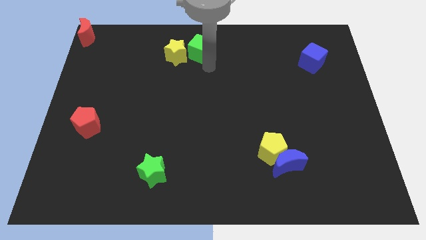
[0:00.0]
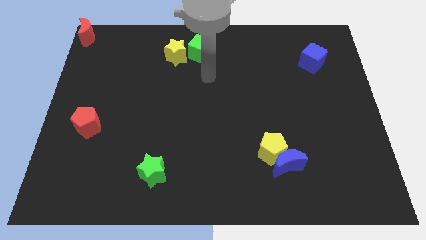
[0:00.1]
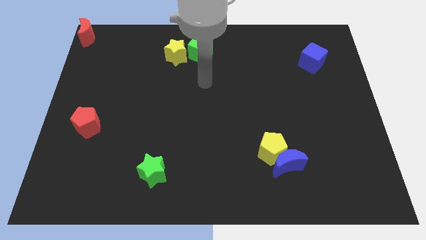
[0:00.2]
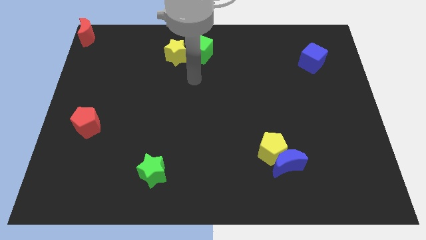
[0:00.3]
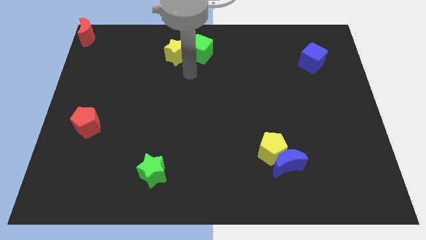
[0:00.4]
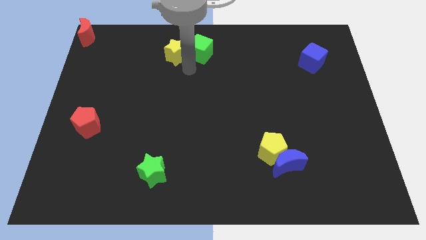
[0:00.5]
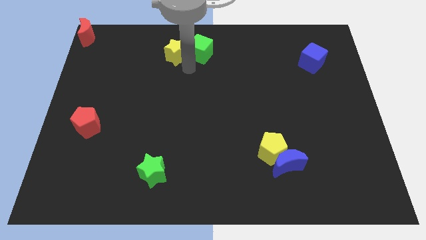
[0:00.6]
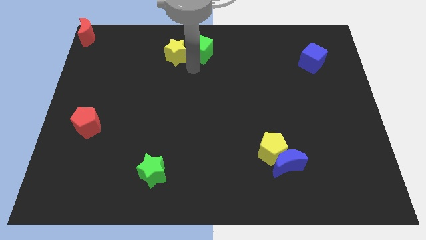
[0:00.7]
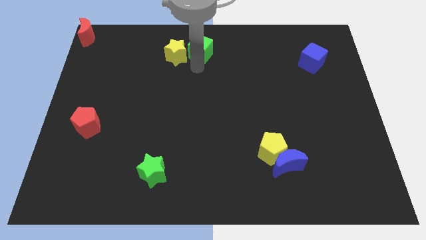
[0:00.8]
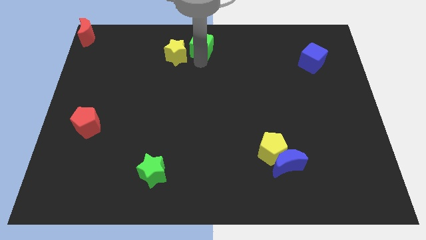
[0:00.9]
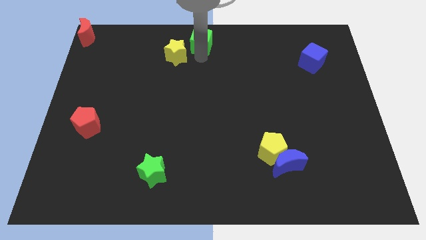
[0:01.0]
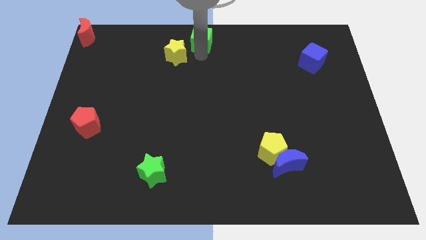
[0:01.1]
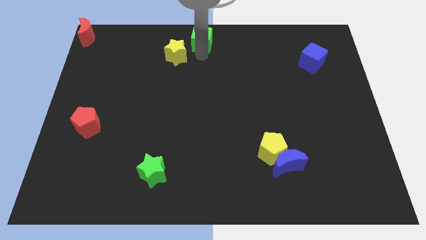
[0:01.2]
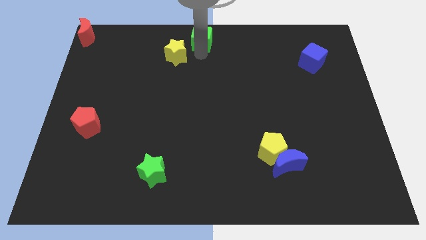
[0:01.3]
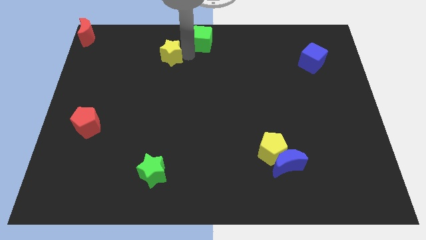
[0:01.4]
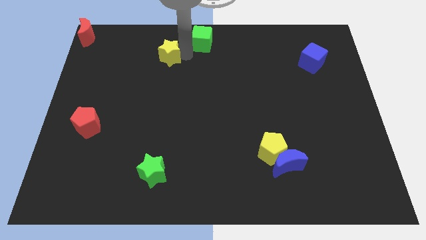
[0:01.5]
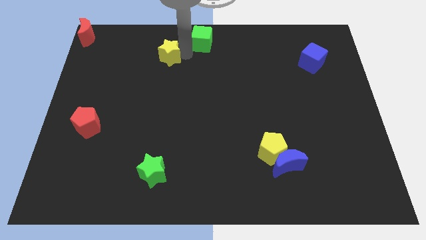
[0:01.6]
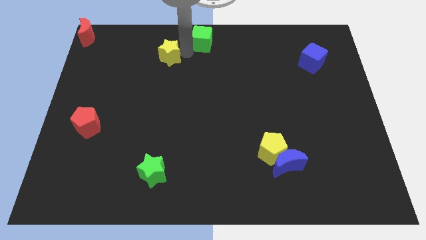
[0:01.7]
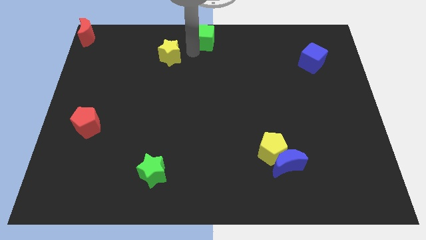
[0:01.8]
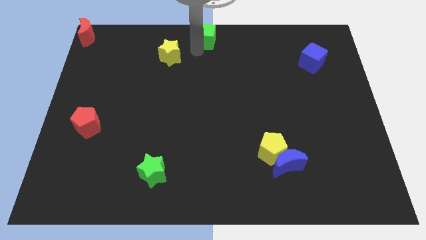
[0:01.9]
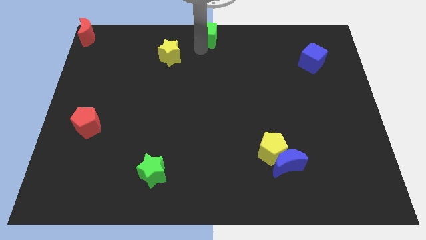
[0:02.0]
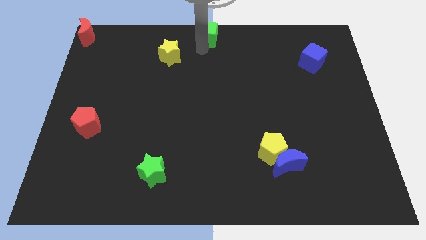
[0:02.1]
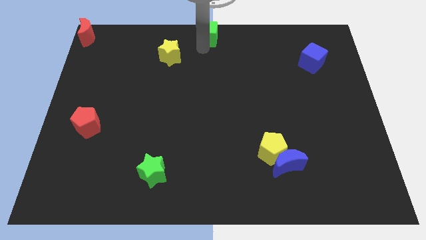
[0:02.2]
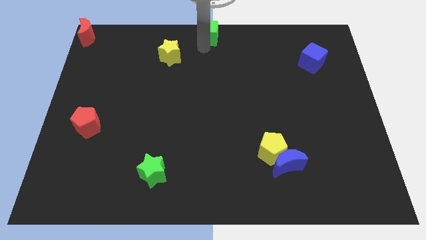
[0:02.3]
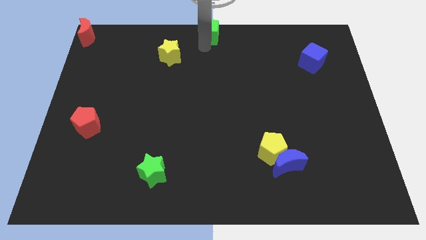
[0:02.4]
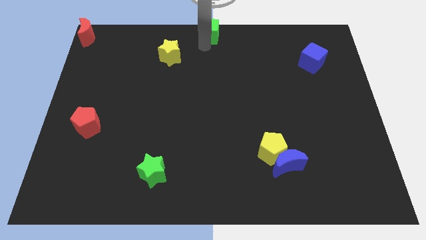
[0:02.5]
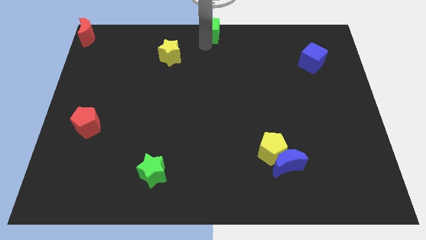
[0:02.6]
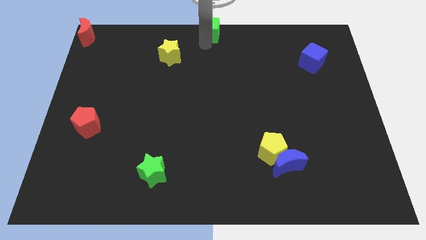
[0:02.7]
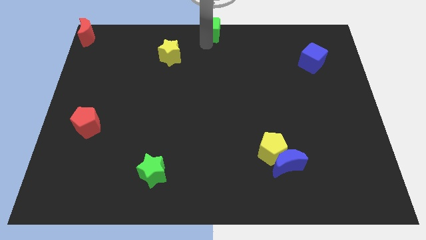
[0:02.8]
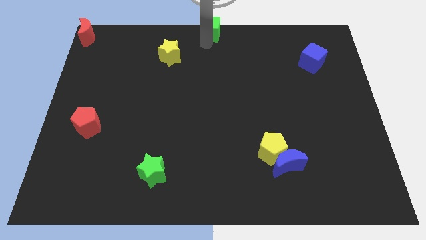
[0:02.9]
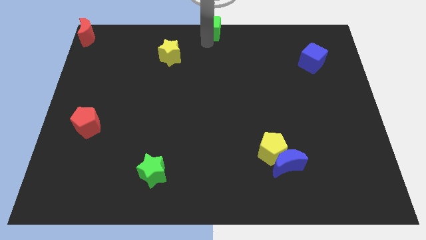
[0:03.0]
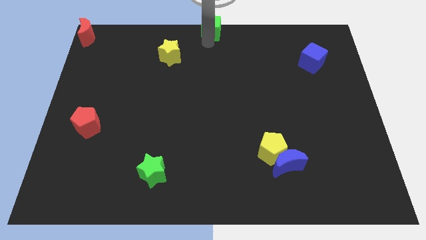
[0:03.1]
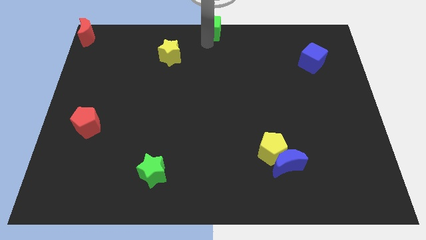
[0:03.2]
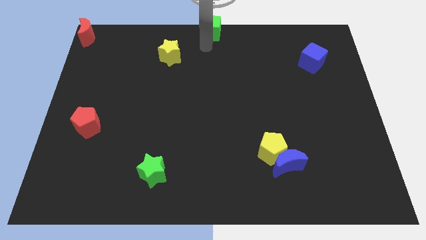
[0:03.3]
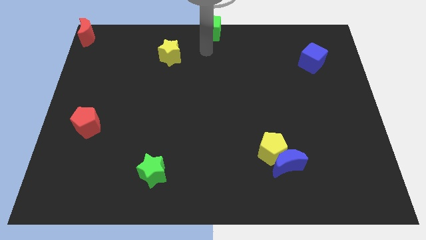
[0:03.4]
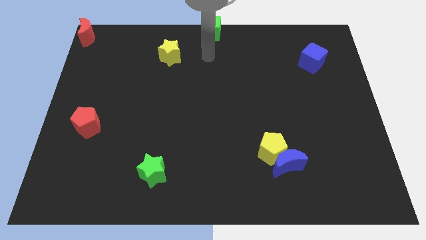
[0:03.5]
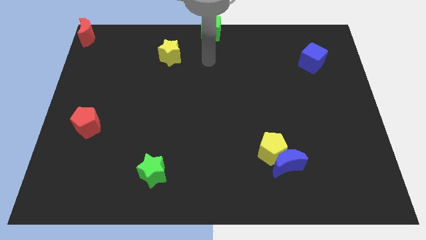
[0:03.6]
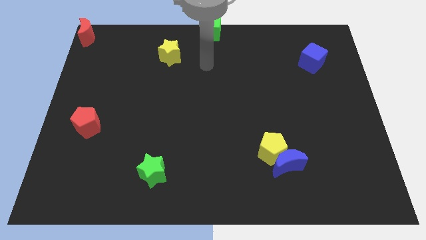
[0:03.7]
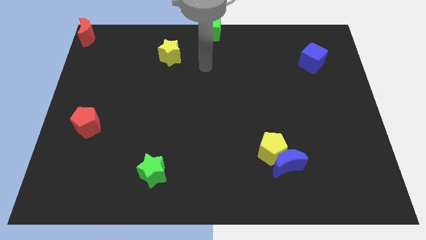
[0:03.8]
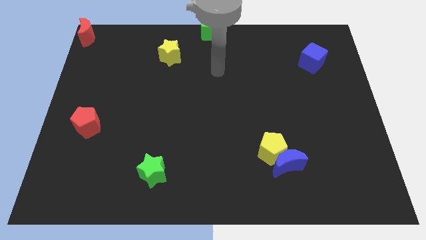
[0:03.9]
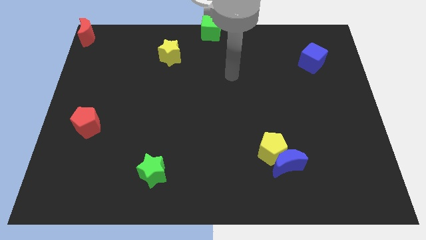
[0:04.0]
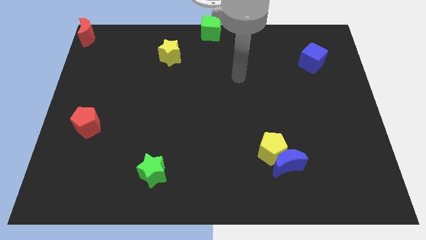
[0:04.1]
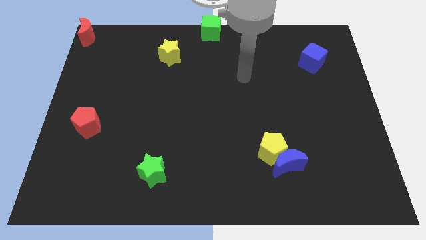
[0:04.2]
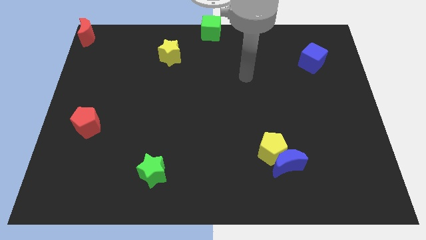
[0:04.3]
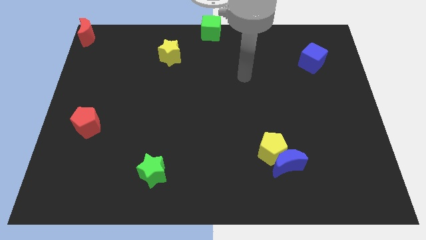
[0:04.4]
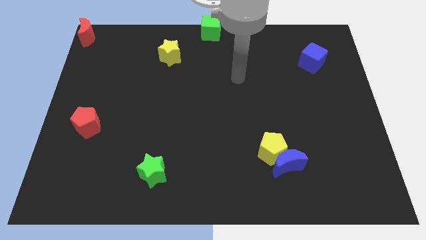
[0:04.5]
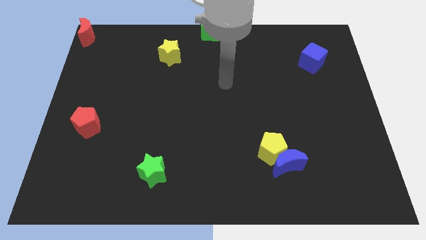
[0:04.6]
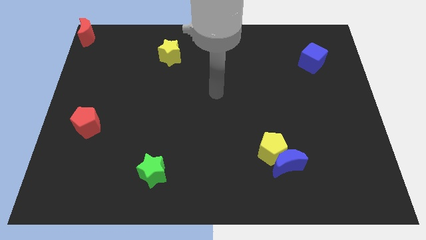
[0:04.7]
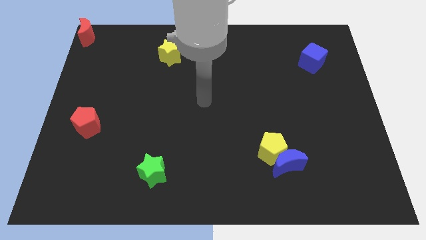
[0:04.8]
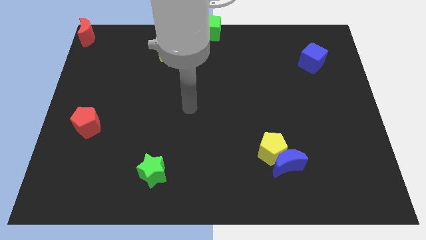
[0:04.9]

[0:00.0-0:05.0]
place the green cube to top center of the board

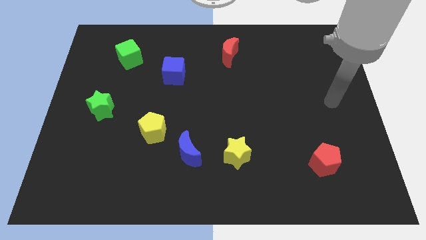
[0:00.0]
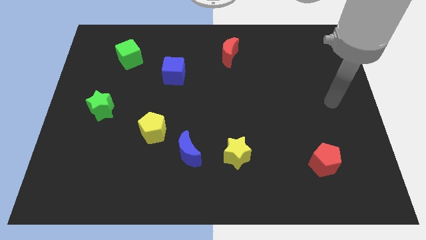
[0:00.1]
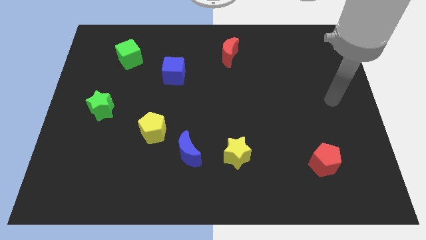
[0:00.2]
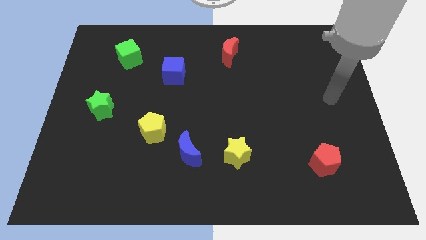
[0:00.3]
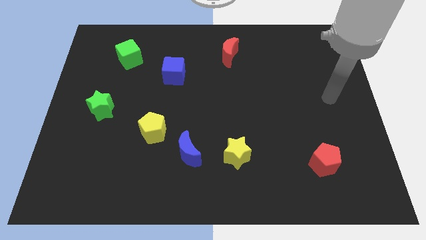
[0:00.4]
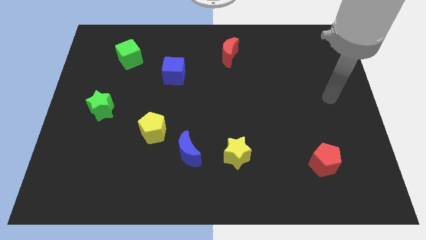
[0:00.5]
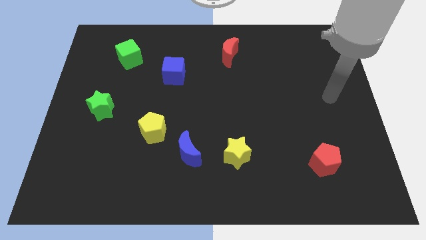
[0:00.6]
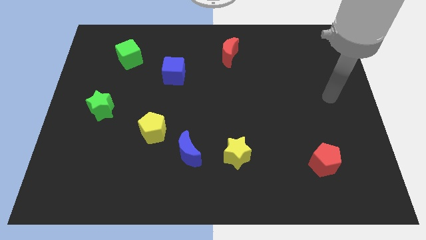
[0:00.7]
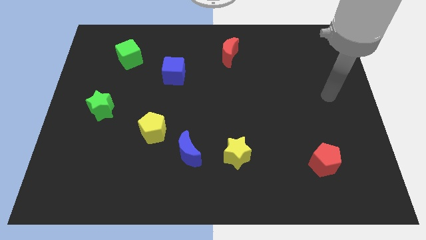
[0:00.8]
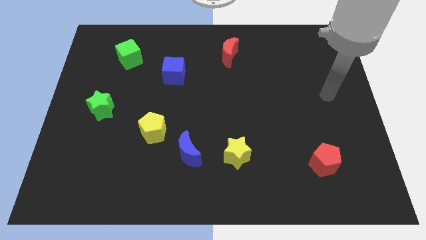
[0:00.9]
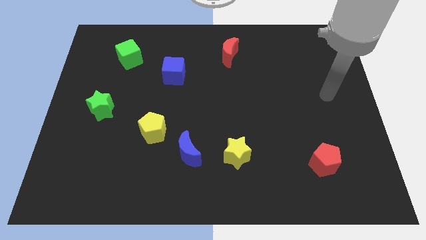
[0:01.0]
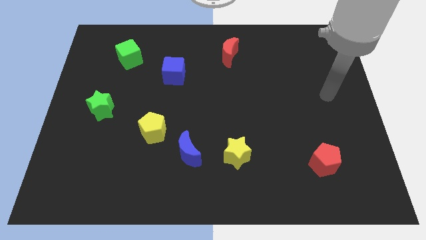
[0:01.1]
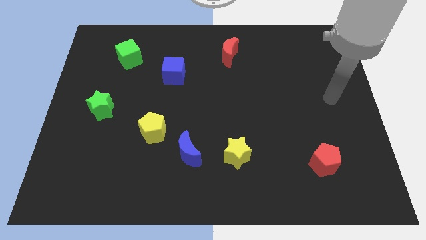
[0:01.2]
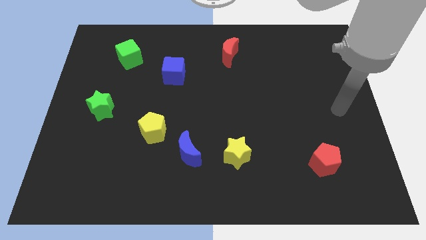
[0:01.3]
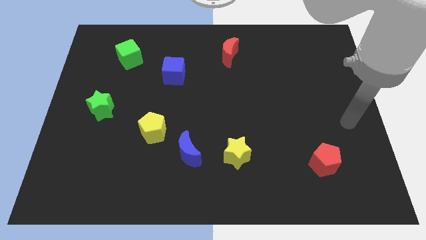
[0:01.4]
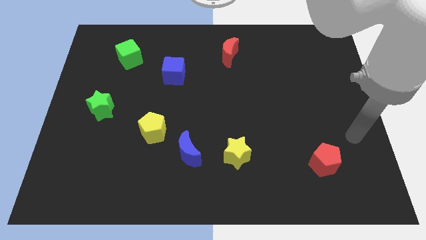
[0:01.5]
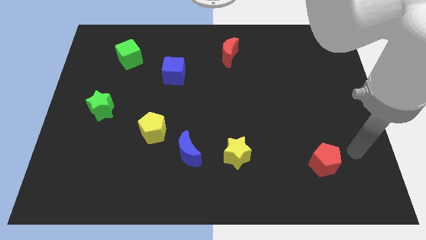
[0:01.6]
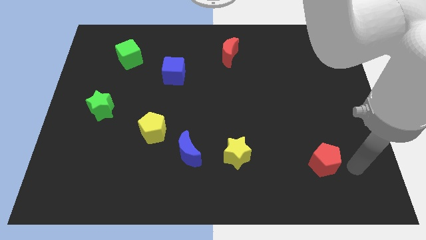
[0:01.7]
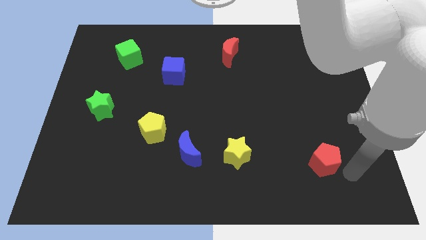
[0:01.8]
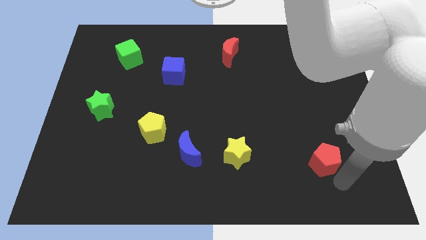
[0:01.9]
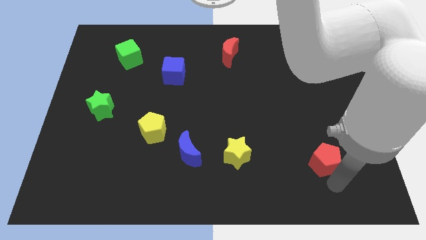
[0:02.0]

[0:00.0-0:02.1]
place your hand below the red pentagon

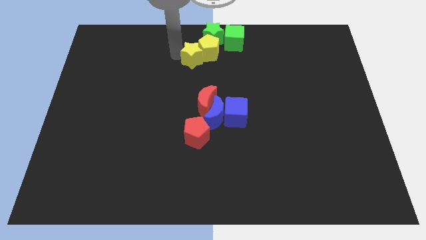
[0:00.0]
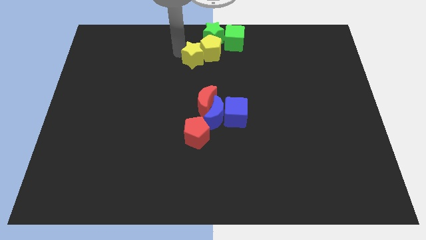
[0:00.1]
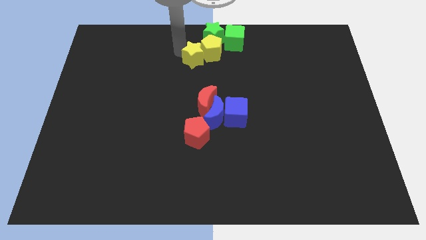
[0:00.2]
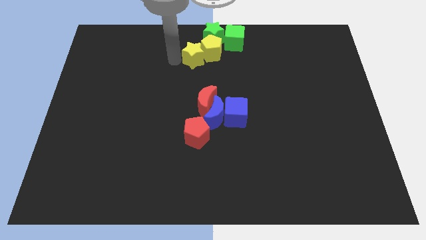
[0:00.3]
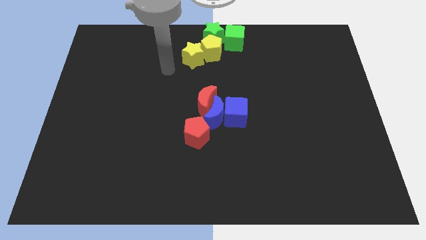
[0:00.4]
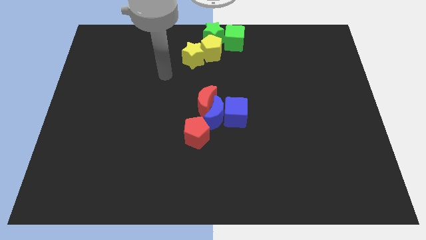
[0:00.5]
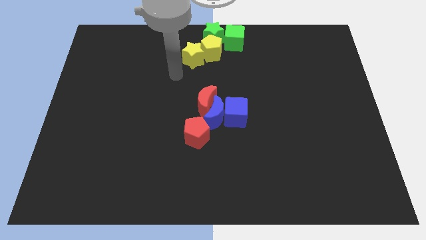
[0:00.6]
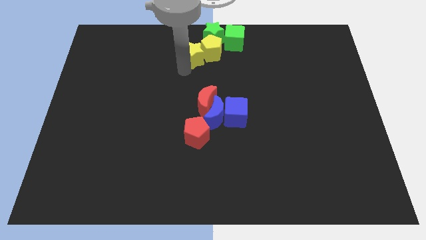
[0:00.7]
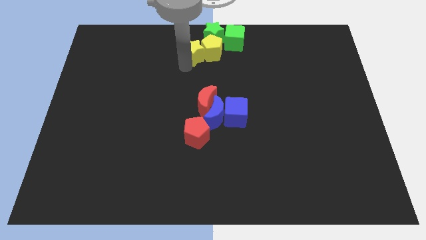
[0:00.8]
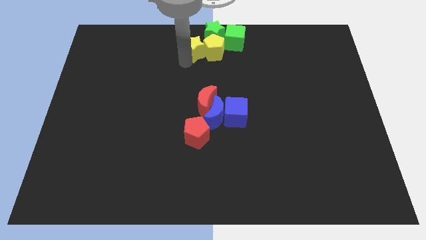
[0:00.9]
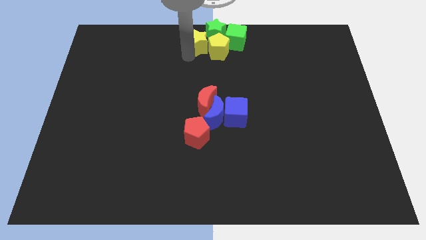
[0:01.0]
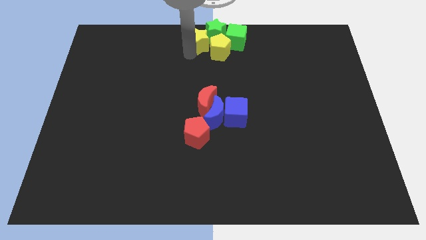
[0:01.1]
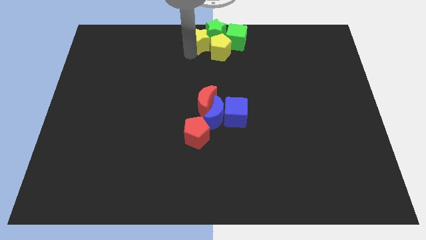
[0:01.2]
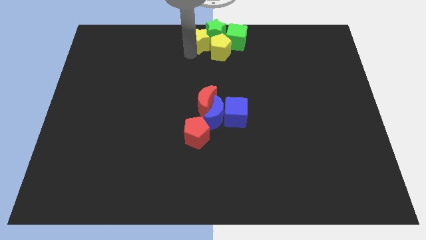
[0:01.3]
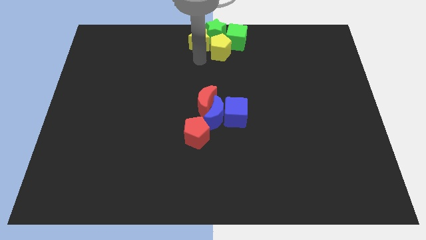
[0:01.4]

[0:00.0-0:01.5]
push the yellow star into the green star

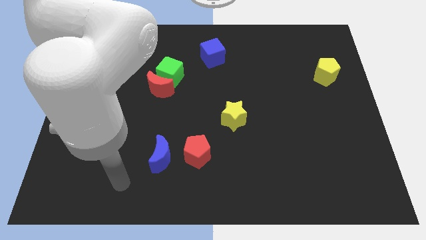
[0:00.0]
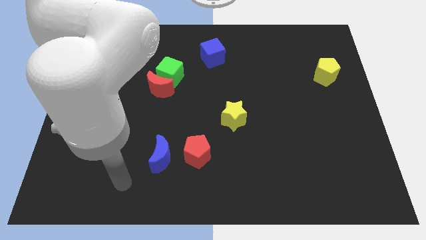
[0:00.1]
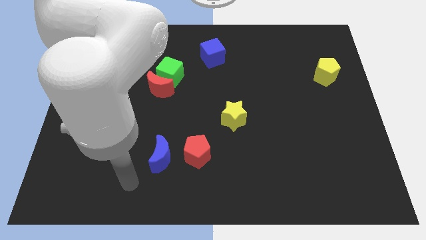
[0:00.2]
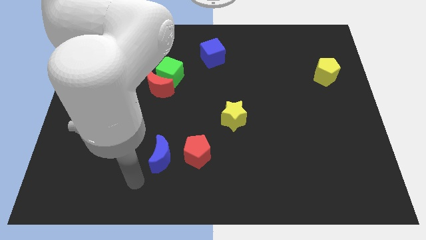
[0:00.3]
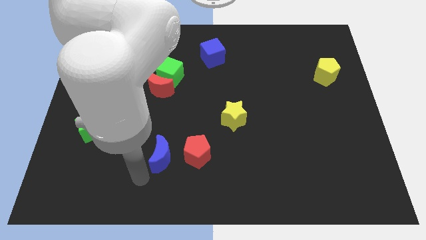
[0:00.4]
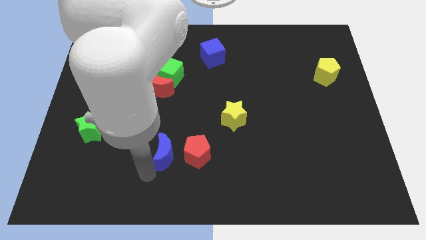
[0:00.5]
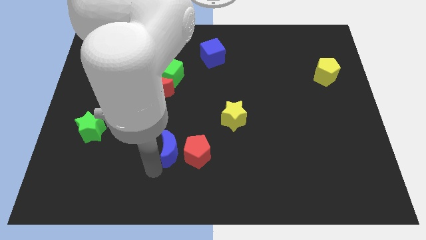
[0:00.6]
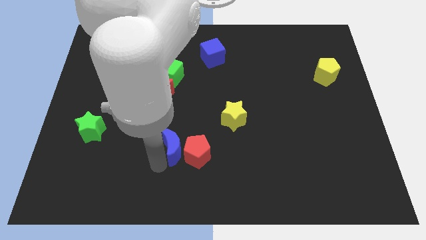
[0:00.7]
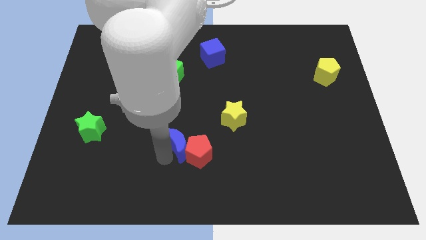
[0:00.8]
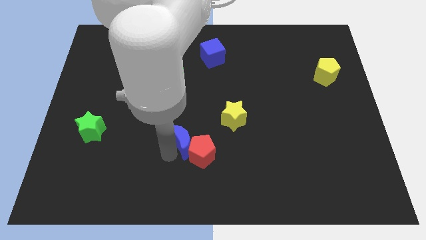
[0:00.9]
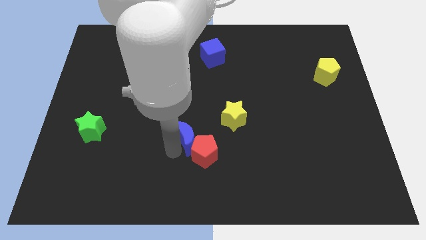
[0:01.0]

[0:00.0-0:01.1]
slide the blue moon into the red pentagon
